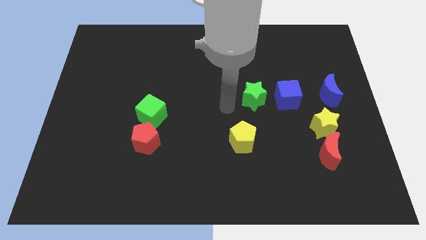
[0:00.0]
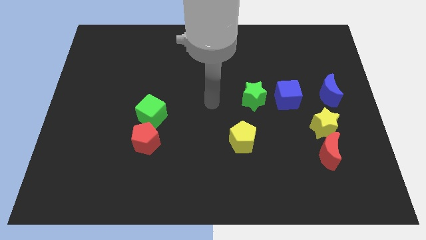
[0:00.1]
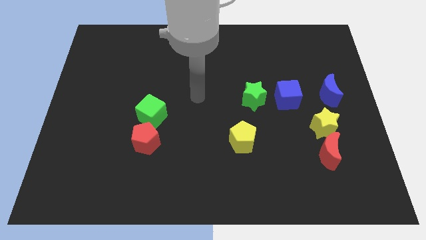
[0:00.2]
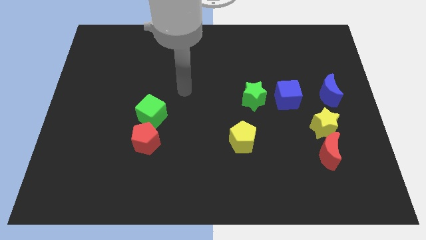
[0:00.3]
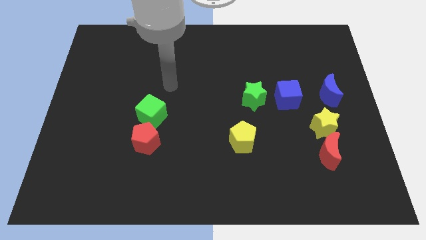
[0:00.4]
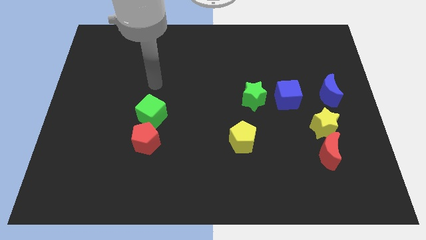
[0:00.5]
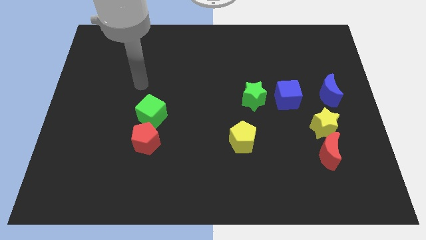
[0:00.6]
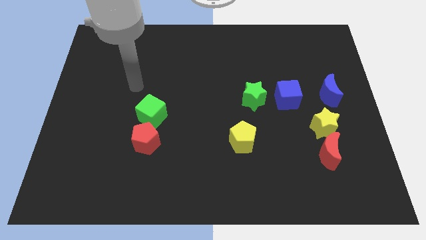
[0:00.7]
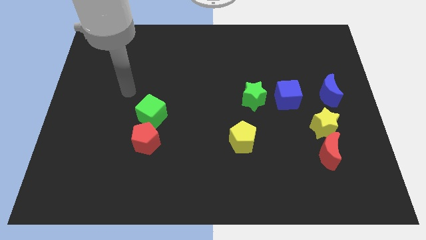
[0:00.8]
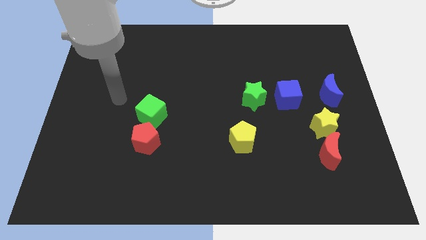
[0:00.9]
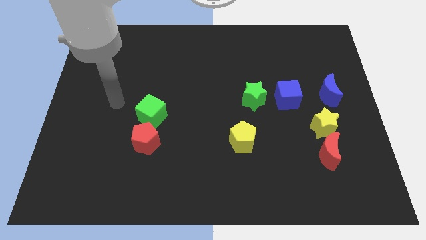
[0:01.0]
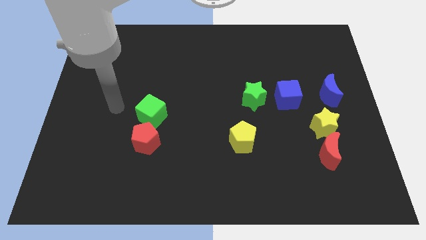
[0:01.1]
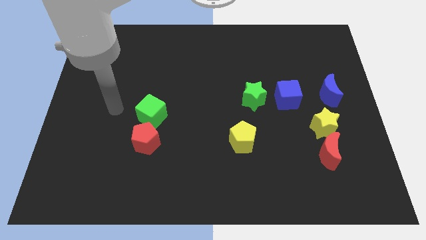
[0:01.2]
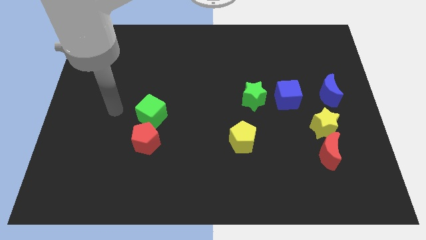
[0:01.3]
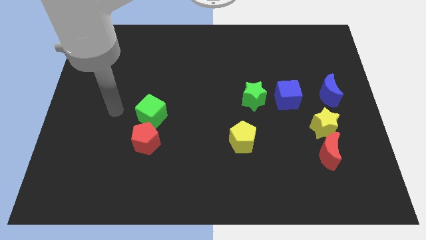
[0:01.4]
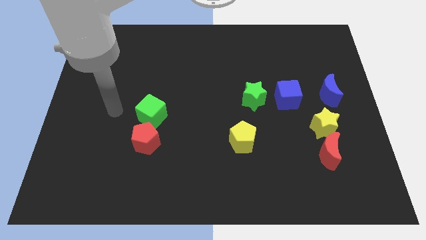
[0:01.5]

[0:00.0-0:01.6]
place your arm to the left side of green cube

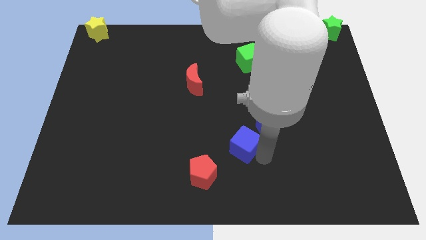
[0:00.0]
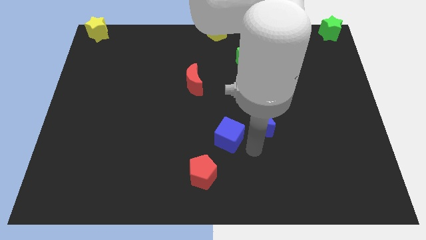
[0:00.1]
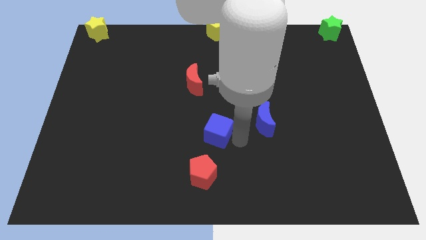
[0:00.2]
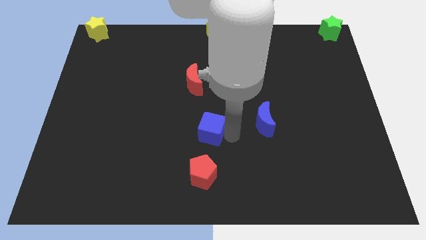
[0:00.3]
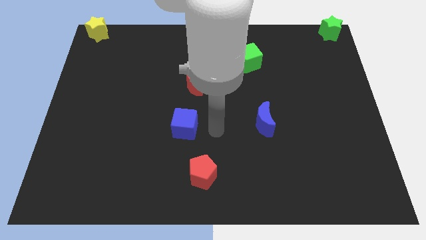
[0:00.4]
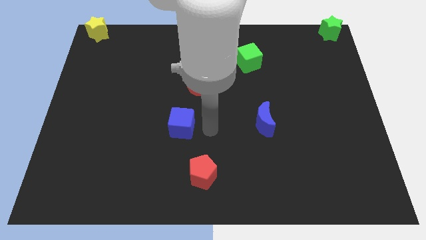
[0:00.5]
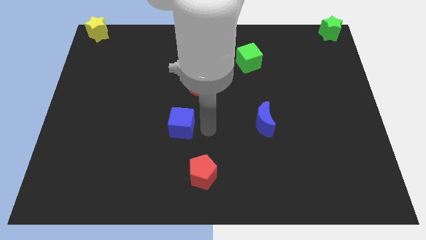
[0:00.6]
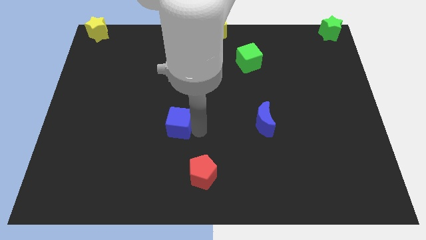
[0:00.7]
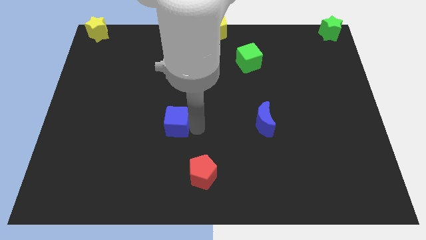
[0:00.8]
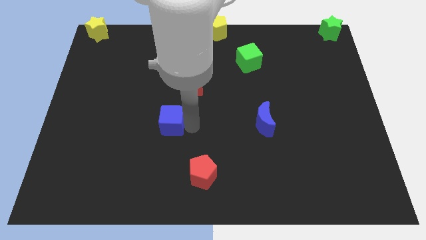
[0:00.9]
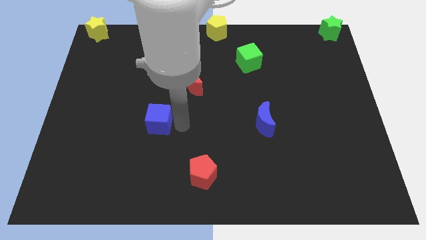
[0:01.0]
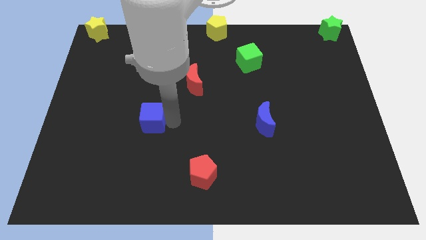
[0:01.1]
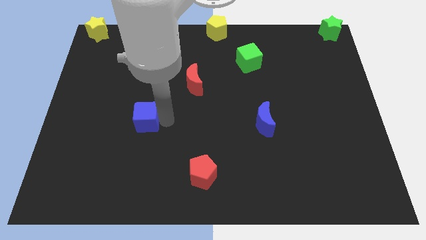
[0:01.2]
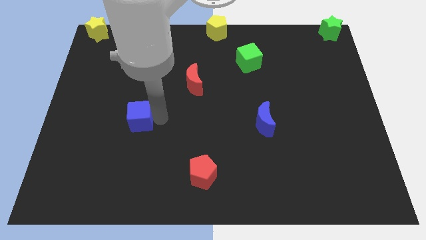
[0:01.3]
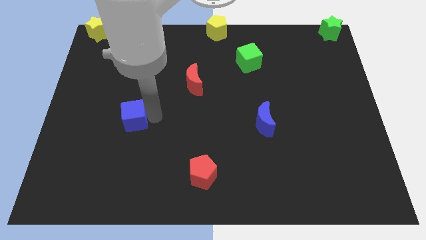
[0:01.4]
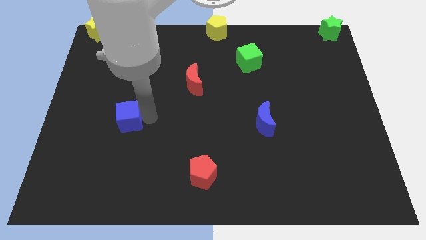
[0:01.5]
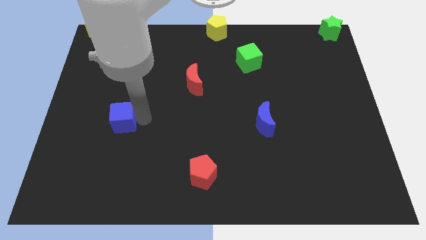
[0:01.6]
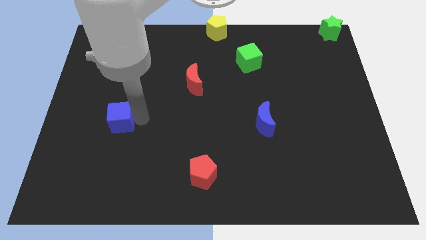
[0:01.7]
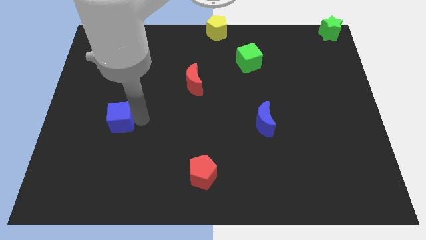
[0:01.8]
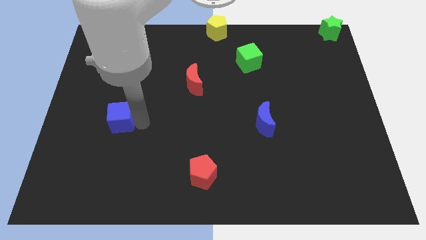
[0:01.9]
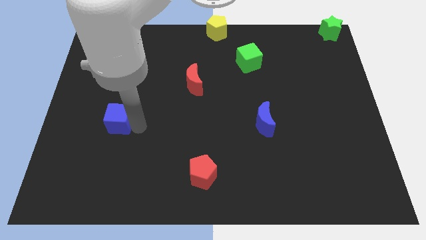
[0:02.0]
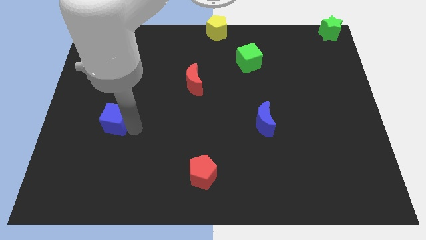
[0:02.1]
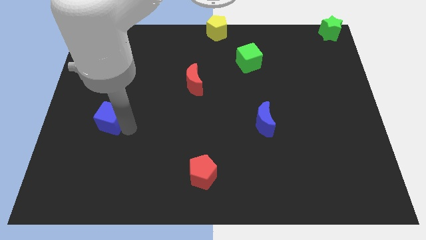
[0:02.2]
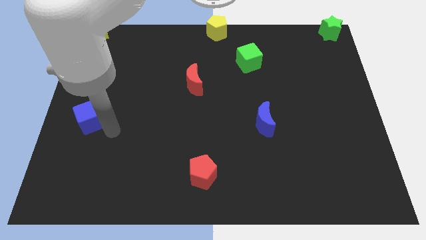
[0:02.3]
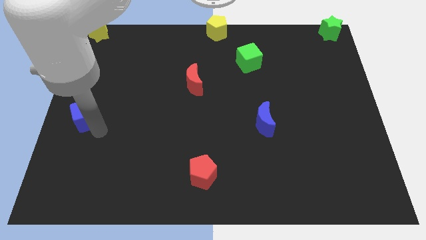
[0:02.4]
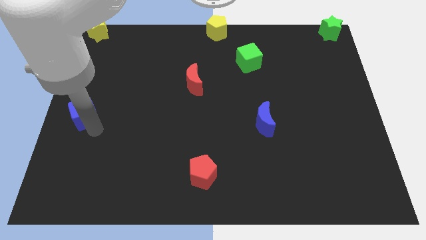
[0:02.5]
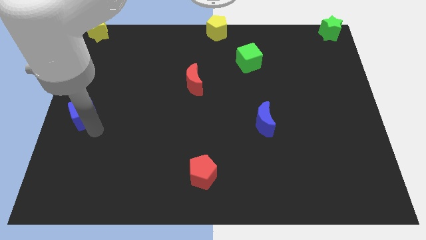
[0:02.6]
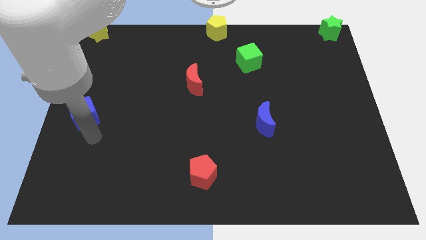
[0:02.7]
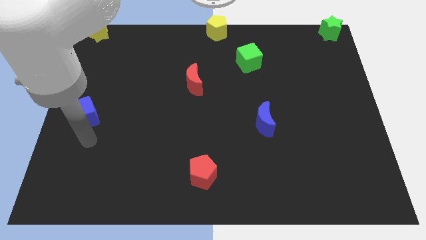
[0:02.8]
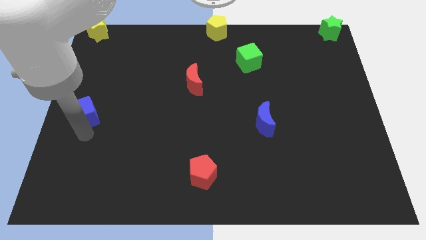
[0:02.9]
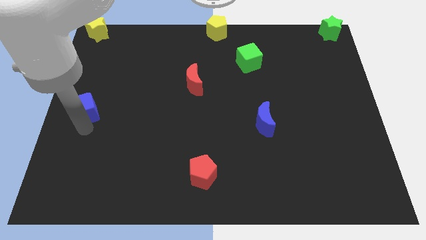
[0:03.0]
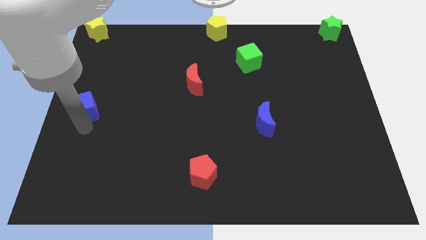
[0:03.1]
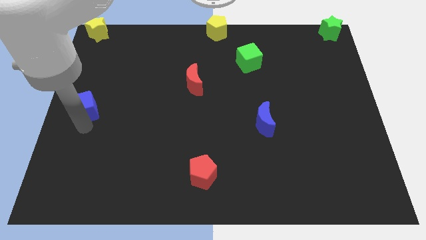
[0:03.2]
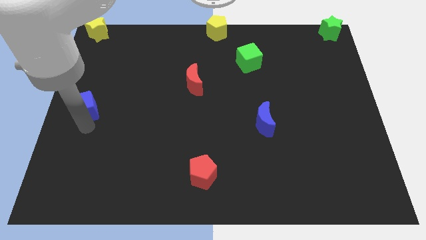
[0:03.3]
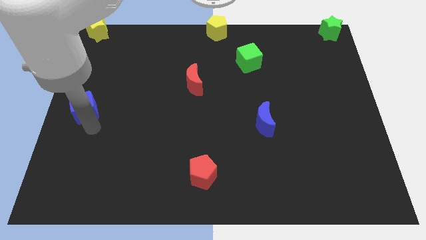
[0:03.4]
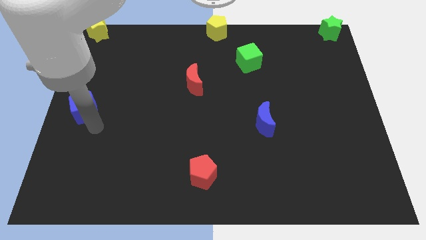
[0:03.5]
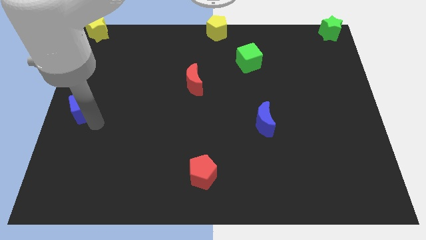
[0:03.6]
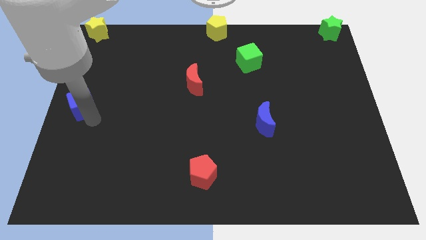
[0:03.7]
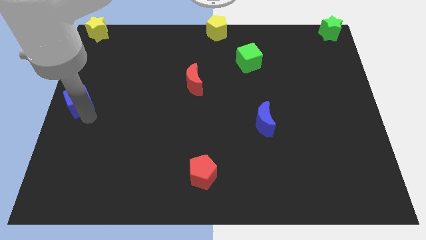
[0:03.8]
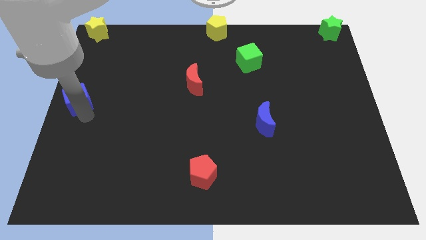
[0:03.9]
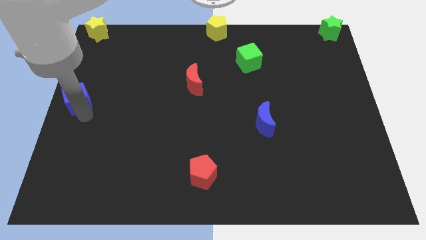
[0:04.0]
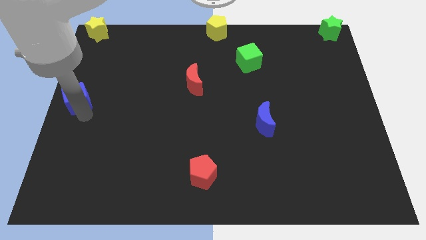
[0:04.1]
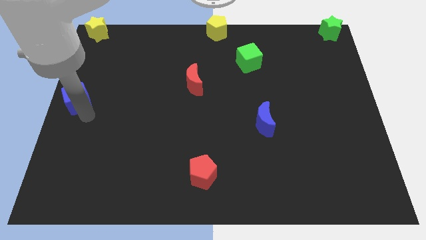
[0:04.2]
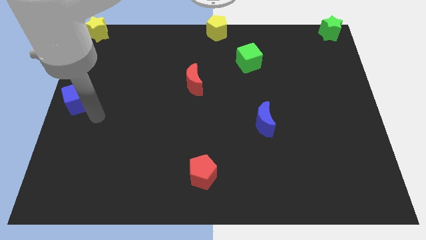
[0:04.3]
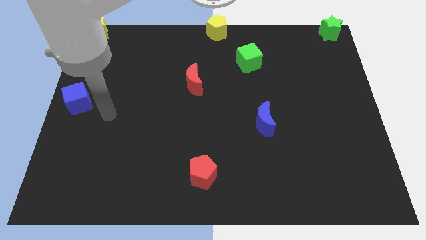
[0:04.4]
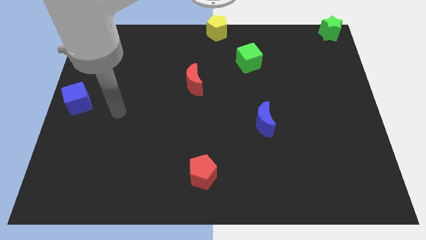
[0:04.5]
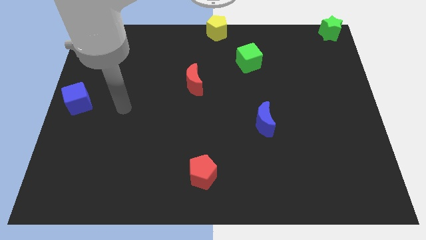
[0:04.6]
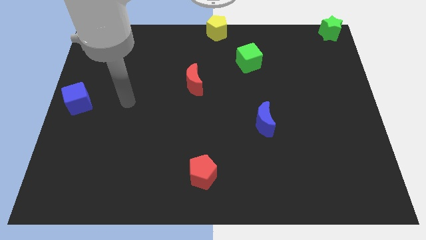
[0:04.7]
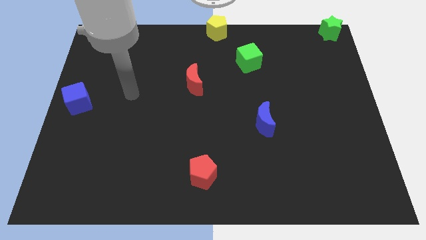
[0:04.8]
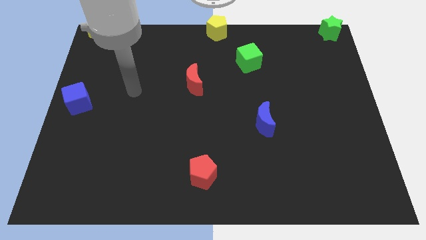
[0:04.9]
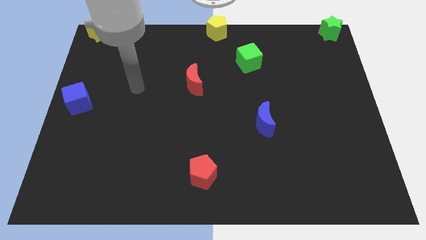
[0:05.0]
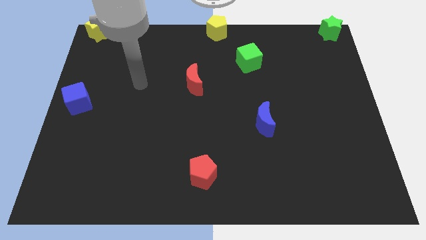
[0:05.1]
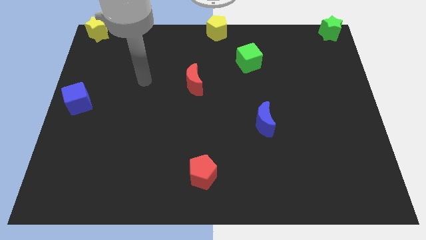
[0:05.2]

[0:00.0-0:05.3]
put the blue cube vertically at the bottom side of the yellow star

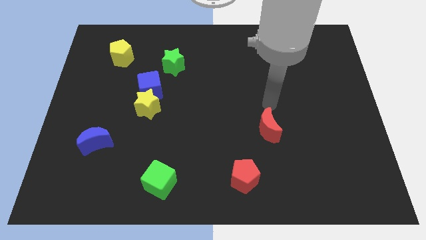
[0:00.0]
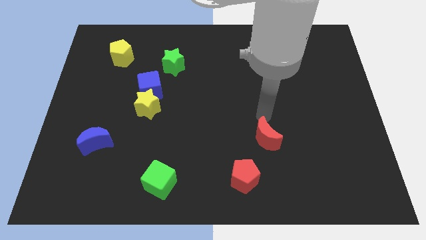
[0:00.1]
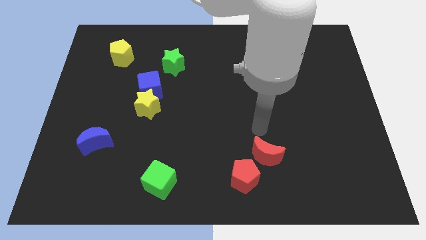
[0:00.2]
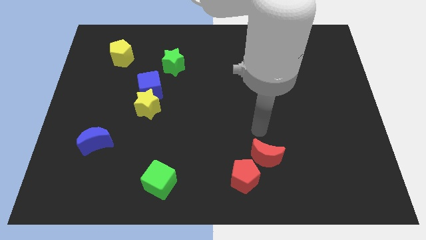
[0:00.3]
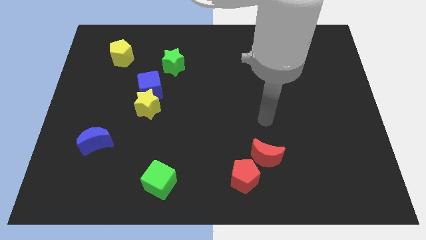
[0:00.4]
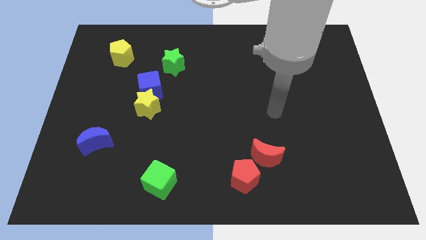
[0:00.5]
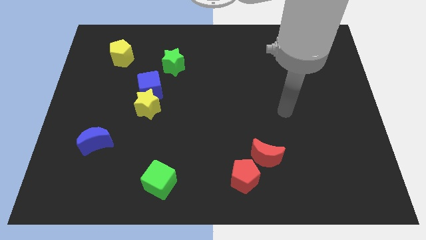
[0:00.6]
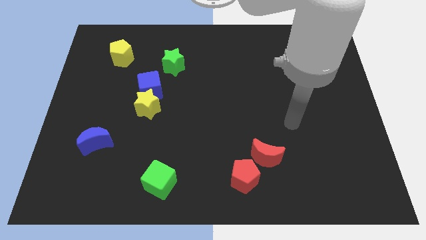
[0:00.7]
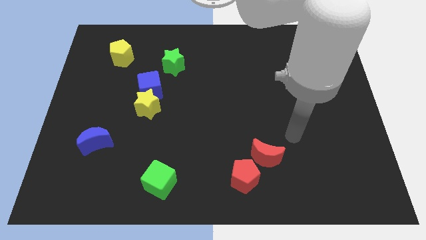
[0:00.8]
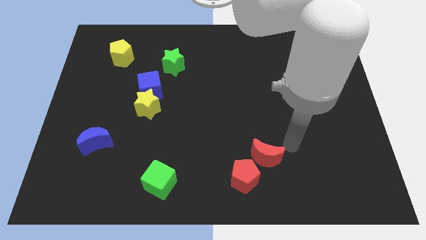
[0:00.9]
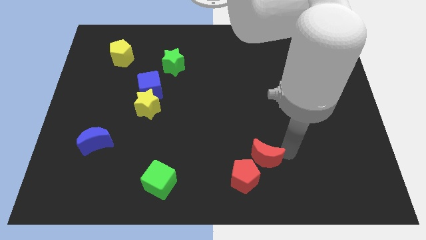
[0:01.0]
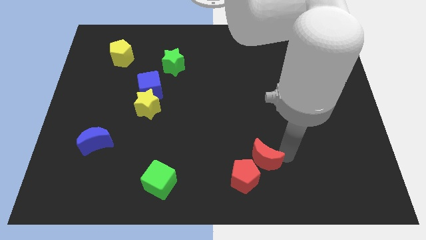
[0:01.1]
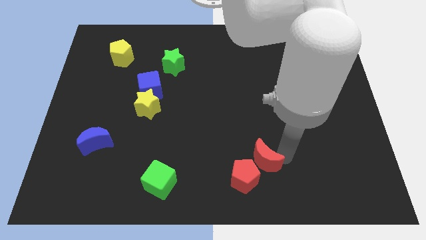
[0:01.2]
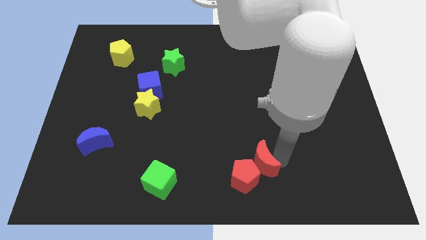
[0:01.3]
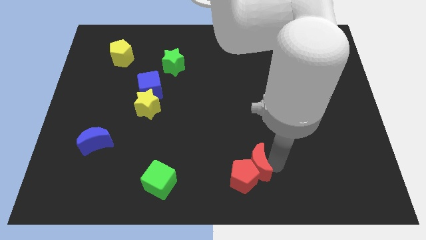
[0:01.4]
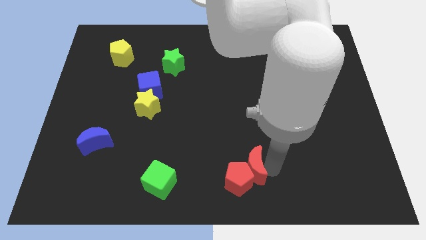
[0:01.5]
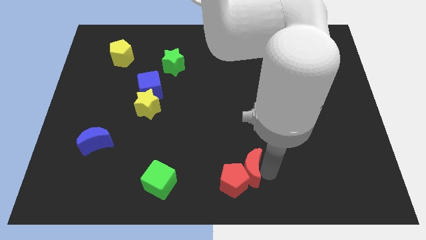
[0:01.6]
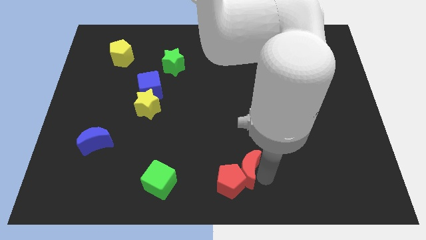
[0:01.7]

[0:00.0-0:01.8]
move red moon into the red pentagon

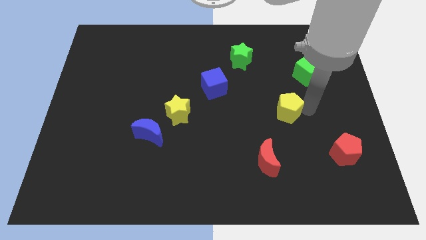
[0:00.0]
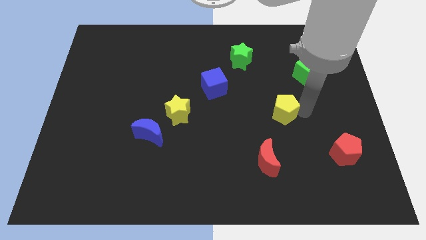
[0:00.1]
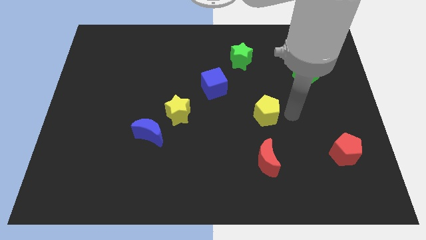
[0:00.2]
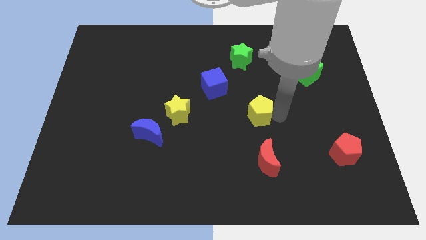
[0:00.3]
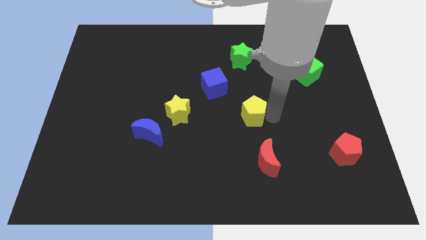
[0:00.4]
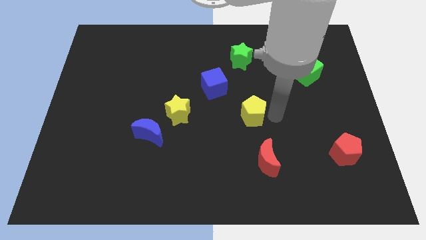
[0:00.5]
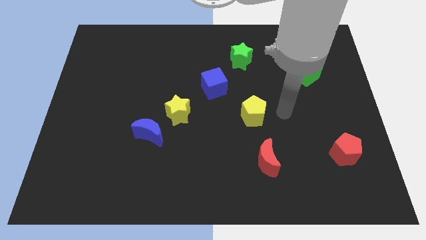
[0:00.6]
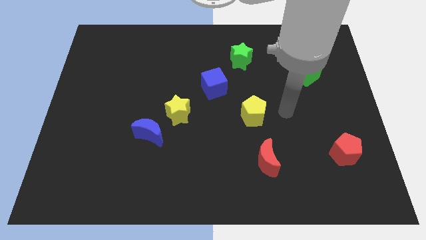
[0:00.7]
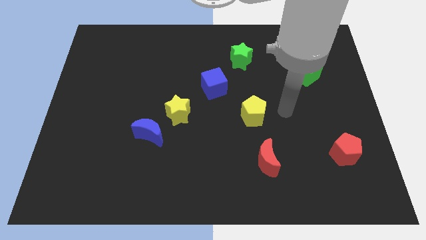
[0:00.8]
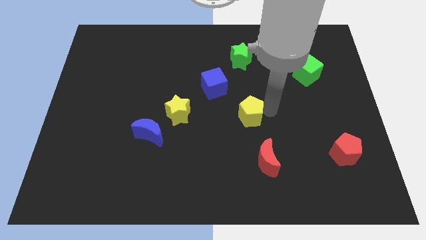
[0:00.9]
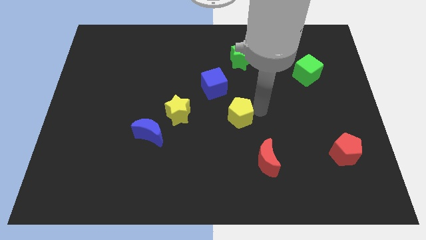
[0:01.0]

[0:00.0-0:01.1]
move yellow pentagon towards center
